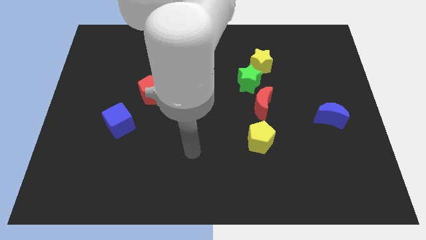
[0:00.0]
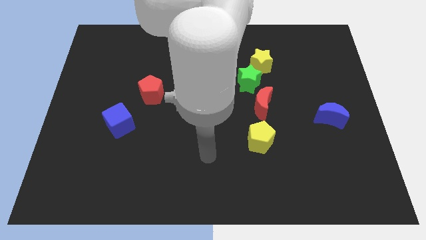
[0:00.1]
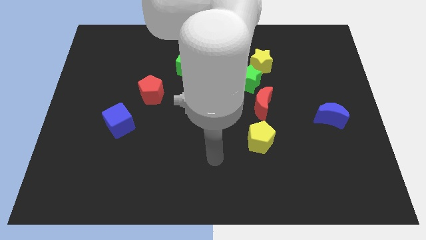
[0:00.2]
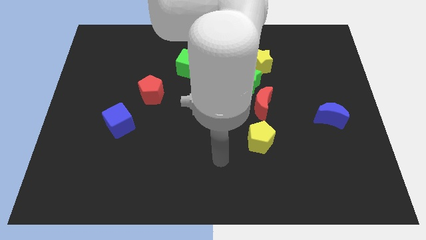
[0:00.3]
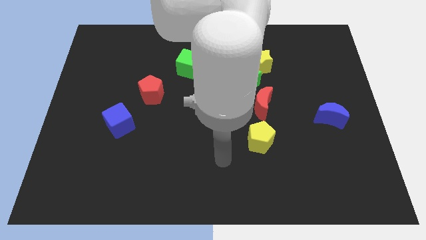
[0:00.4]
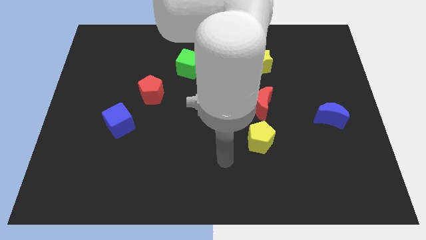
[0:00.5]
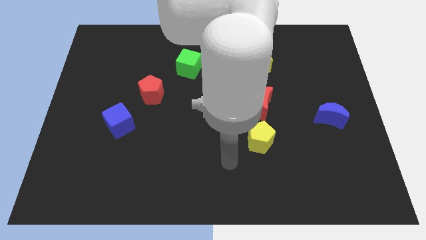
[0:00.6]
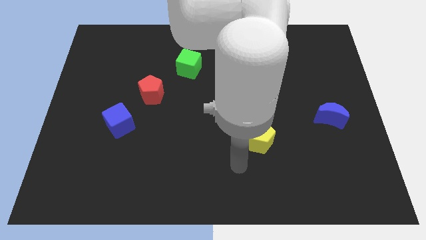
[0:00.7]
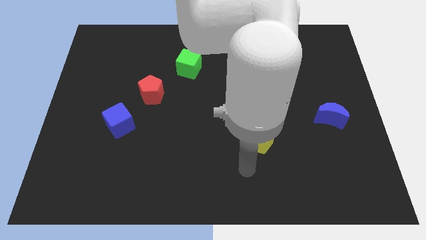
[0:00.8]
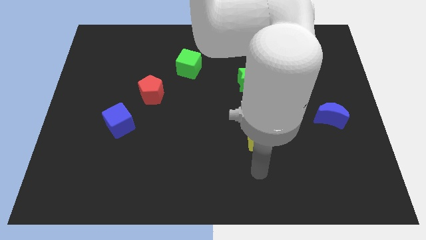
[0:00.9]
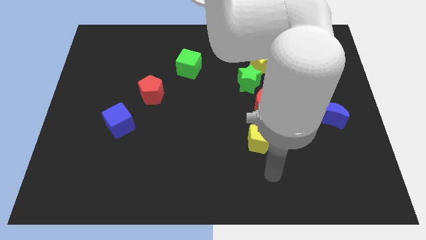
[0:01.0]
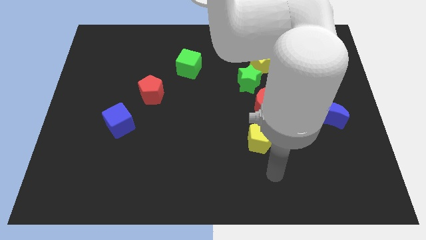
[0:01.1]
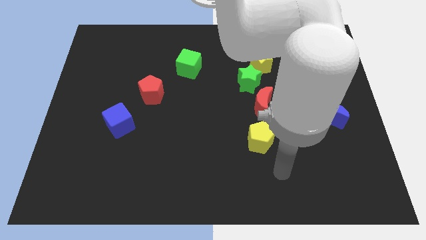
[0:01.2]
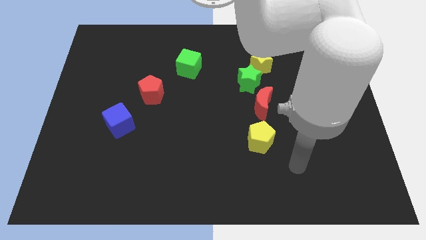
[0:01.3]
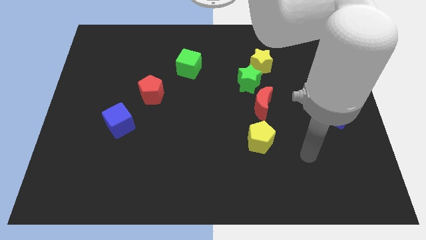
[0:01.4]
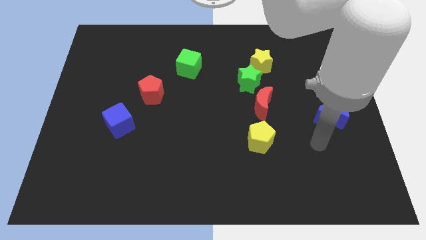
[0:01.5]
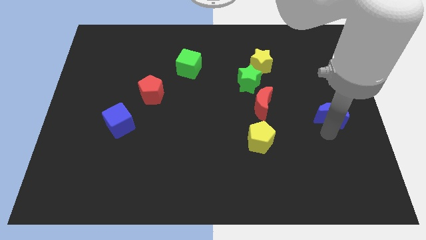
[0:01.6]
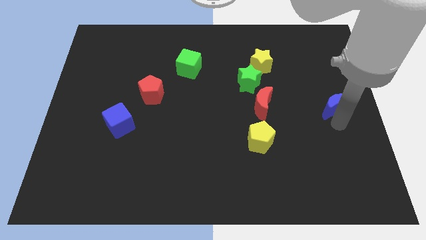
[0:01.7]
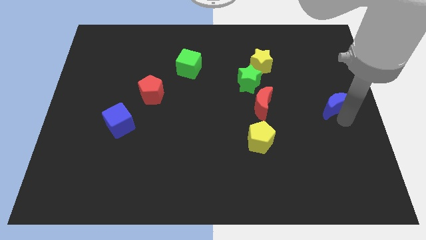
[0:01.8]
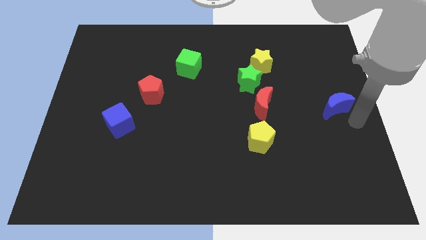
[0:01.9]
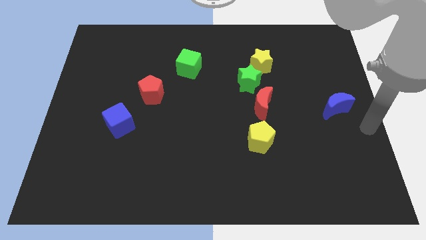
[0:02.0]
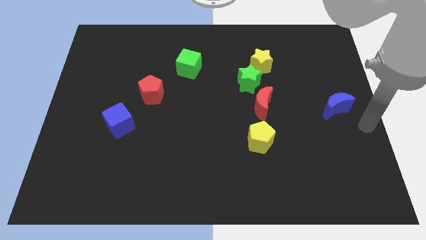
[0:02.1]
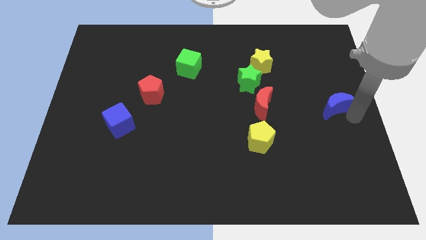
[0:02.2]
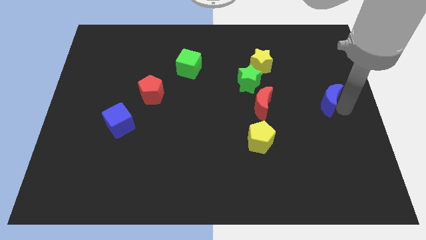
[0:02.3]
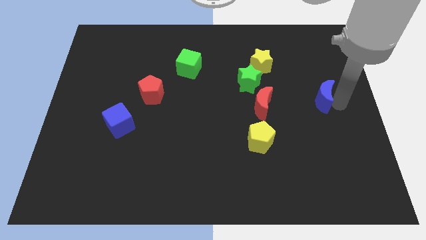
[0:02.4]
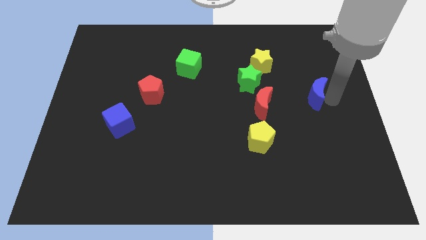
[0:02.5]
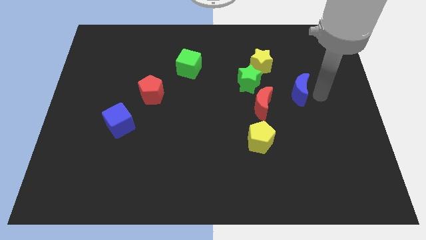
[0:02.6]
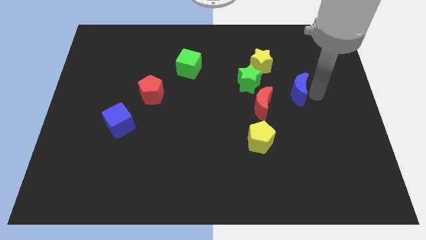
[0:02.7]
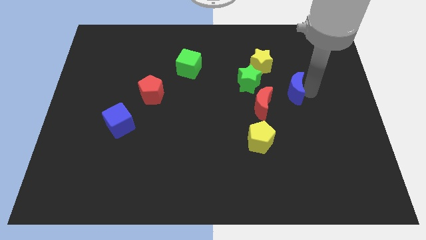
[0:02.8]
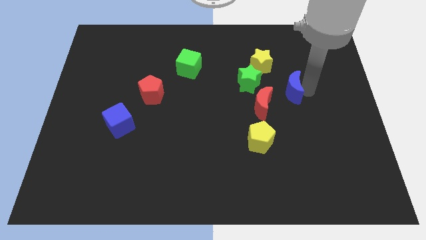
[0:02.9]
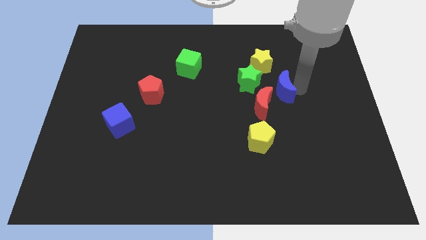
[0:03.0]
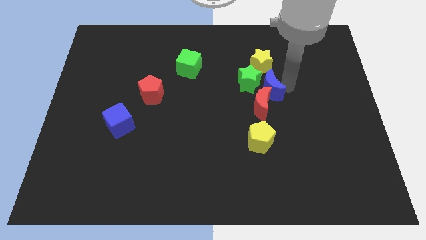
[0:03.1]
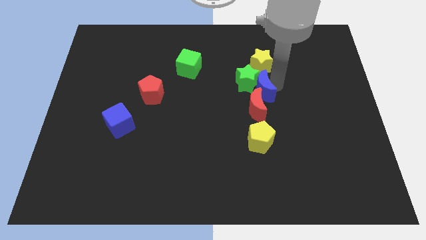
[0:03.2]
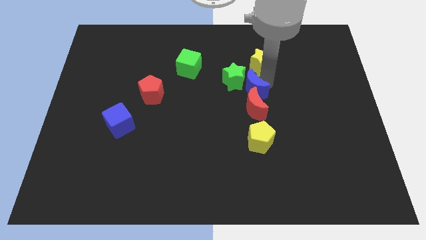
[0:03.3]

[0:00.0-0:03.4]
push the blue moon close to the green star

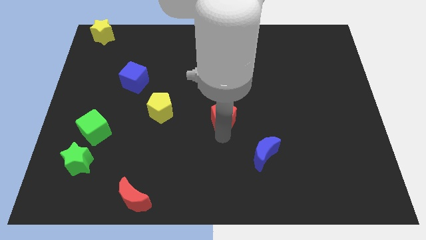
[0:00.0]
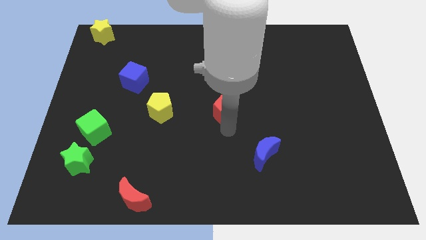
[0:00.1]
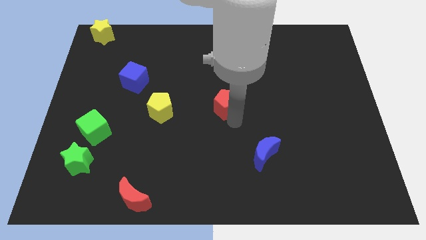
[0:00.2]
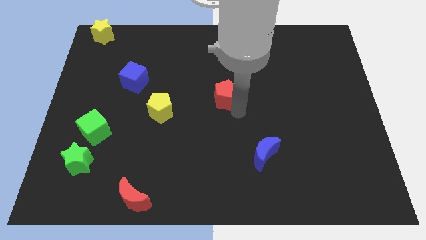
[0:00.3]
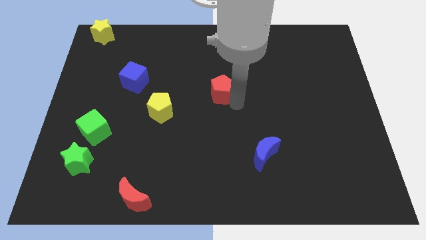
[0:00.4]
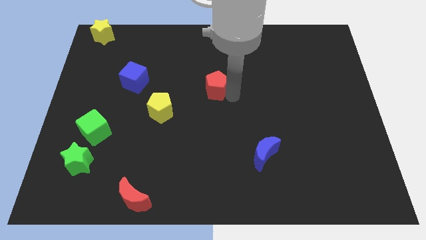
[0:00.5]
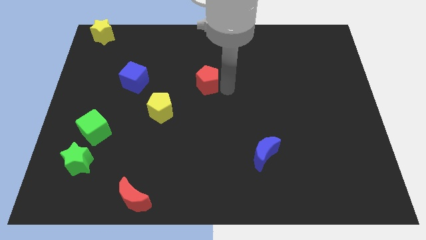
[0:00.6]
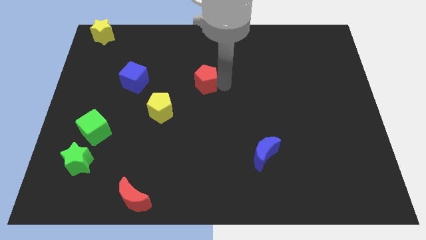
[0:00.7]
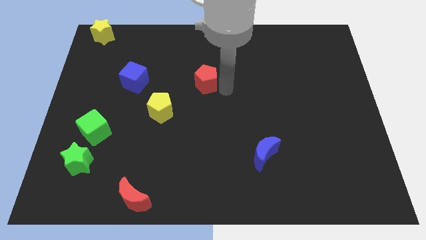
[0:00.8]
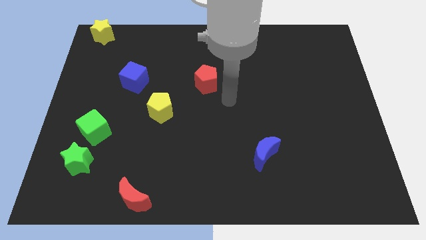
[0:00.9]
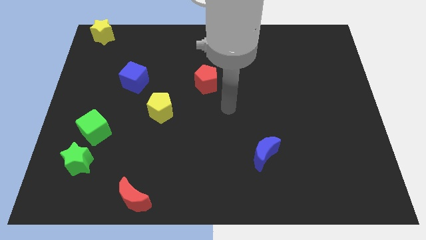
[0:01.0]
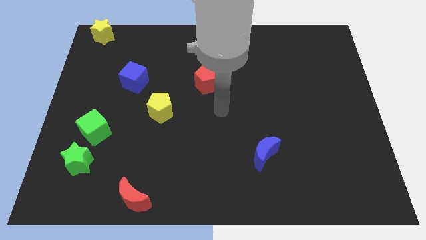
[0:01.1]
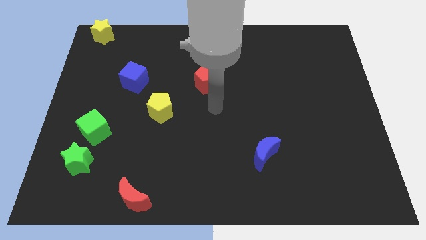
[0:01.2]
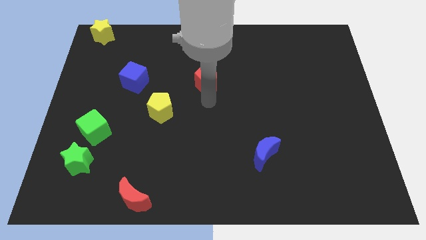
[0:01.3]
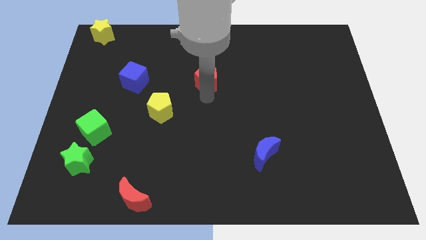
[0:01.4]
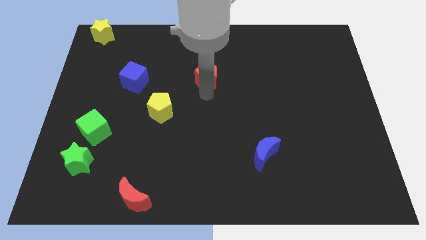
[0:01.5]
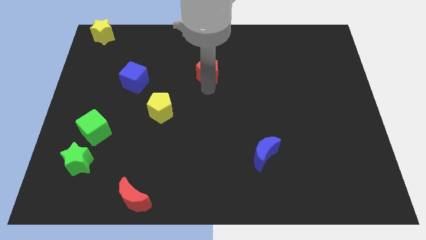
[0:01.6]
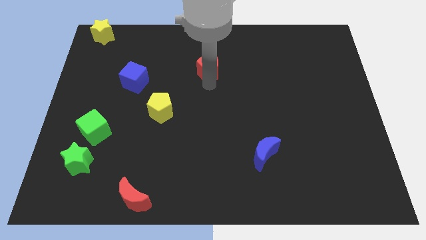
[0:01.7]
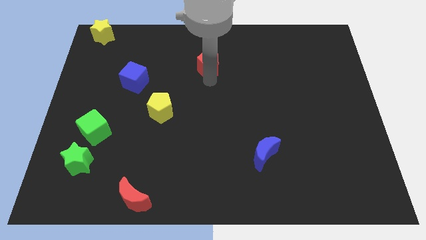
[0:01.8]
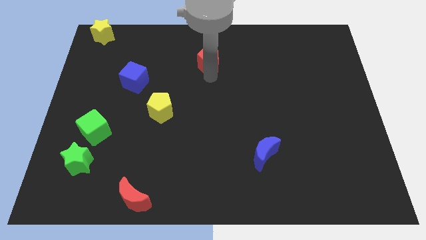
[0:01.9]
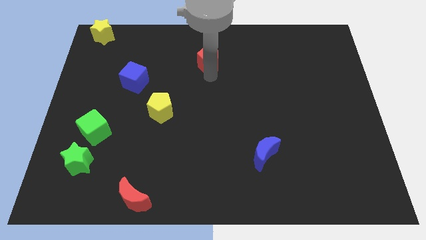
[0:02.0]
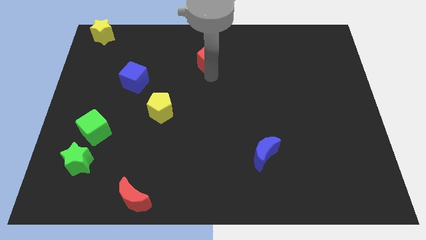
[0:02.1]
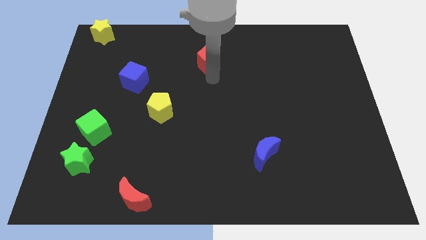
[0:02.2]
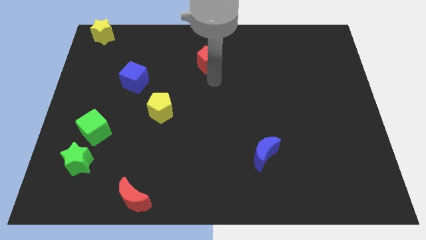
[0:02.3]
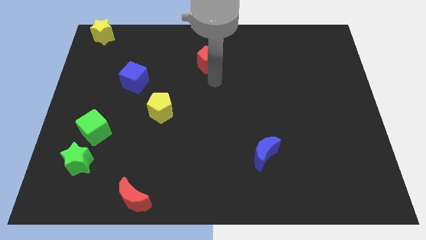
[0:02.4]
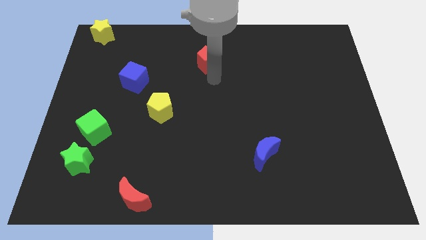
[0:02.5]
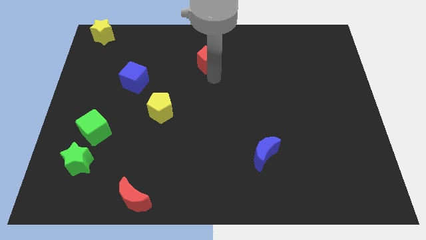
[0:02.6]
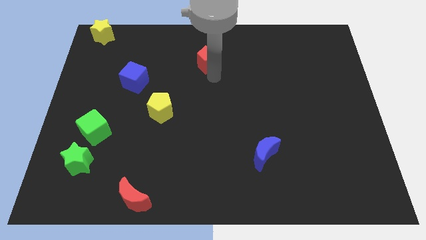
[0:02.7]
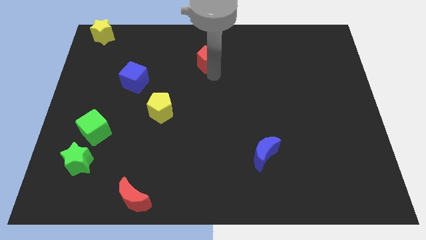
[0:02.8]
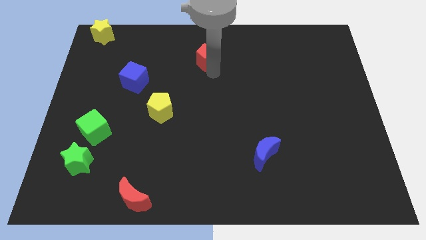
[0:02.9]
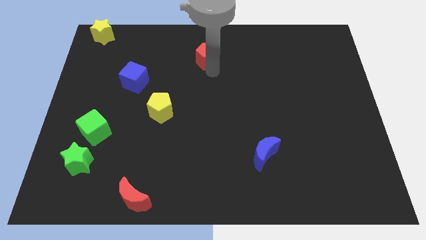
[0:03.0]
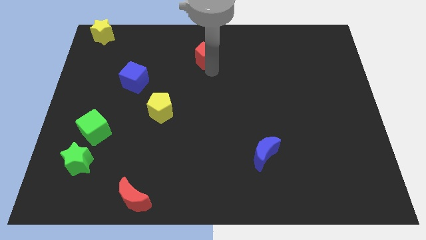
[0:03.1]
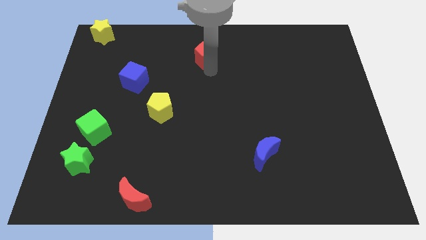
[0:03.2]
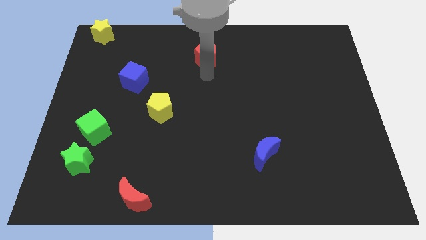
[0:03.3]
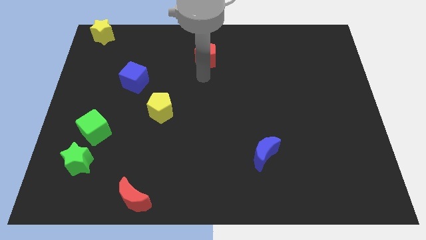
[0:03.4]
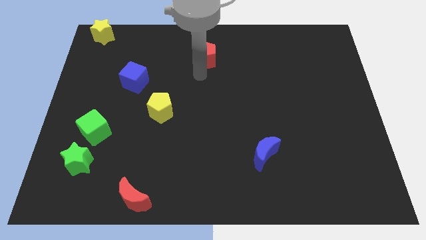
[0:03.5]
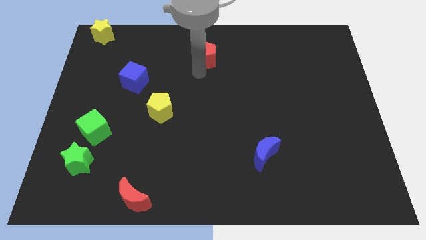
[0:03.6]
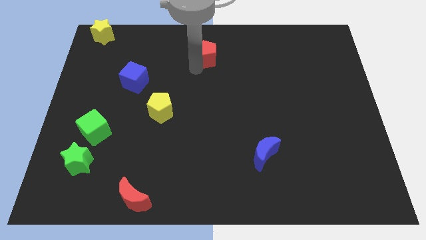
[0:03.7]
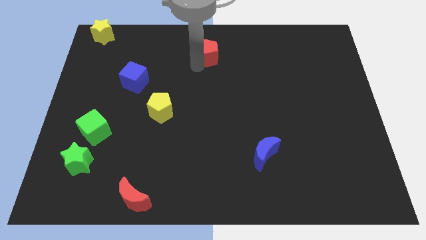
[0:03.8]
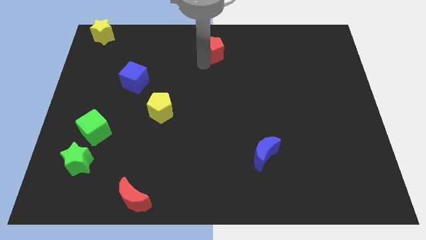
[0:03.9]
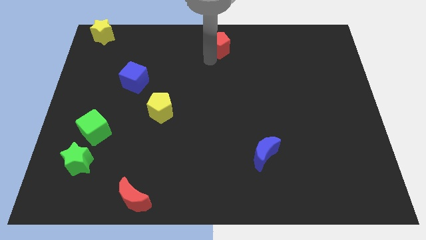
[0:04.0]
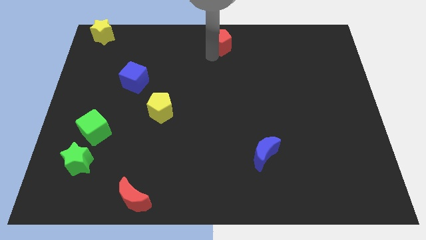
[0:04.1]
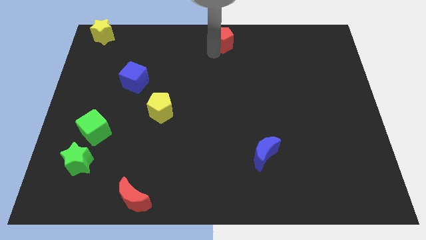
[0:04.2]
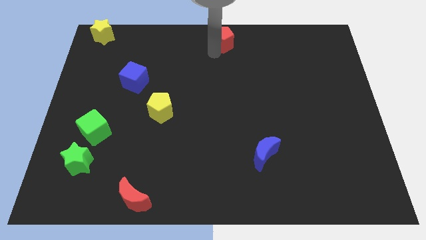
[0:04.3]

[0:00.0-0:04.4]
place red pentagon to the top center

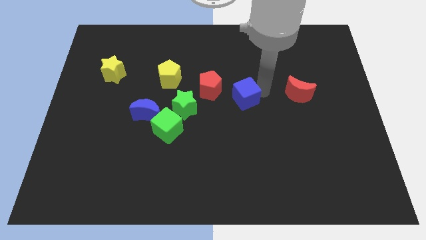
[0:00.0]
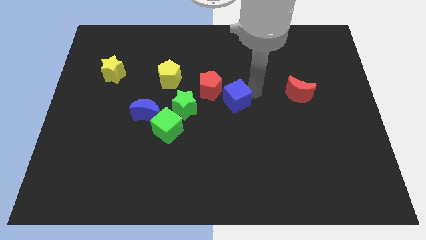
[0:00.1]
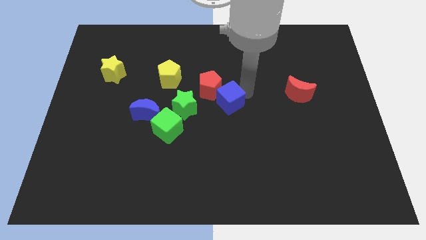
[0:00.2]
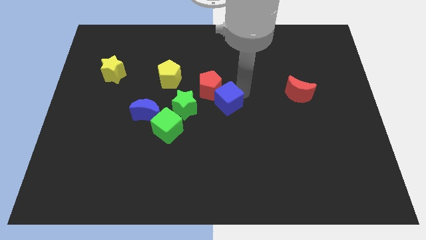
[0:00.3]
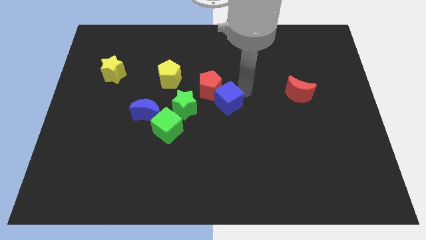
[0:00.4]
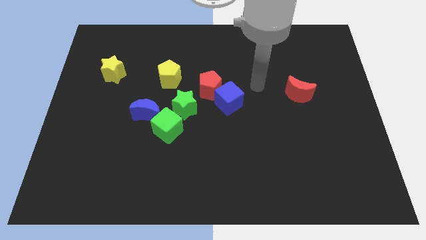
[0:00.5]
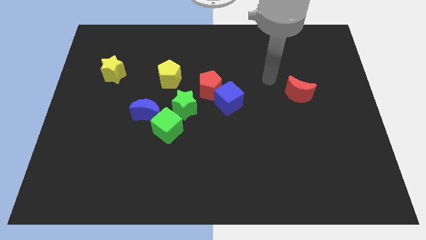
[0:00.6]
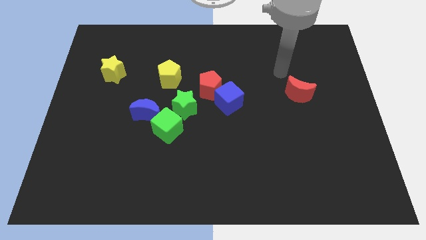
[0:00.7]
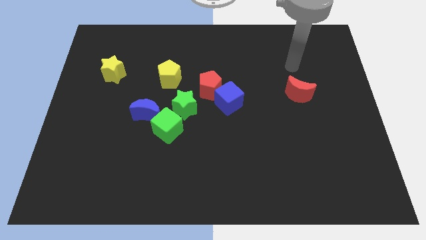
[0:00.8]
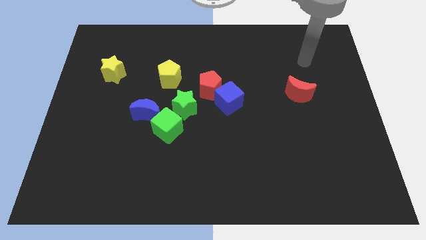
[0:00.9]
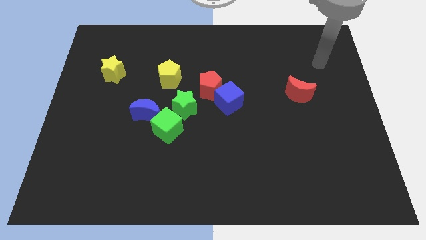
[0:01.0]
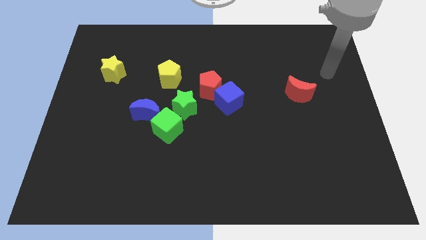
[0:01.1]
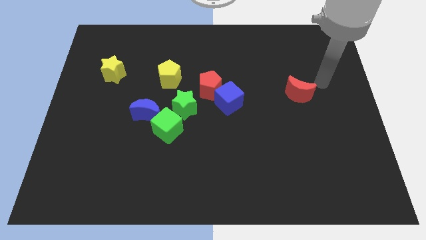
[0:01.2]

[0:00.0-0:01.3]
move the blue cube to the bottom right side of the red pentagon
